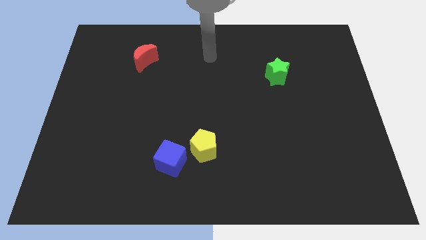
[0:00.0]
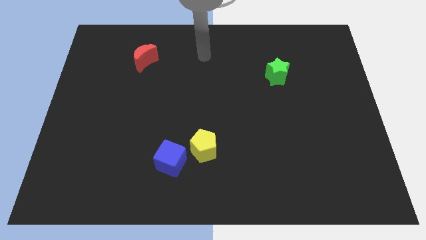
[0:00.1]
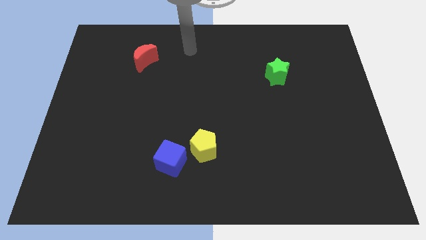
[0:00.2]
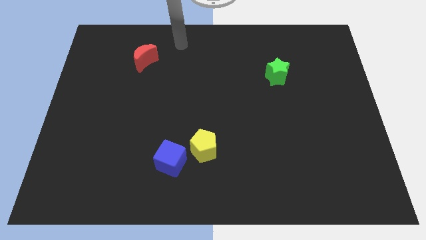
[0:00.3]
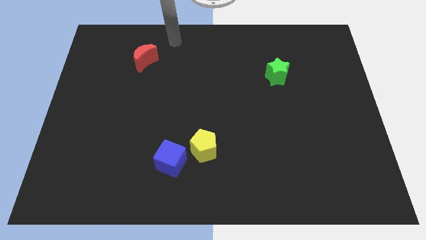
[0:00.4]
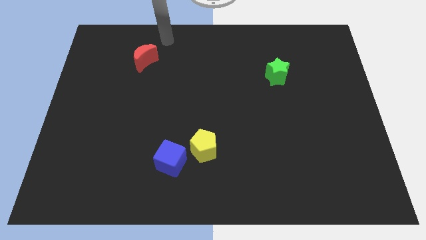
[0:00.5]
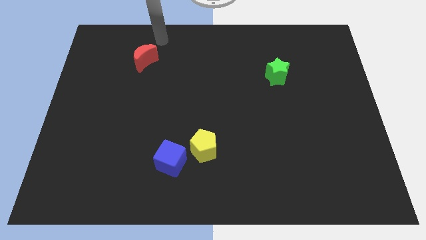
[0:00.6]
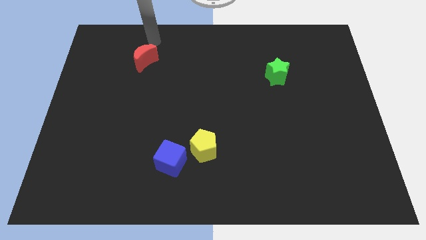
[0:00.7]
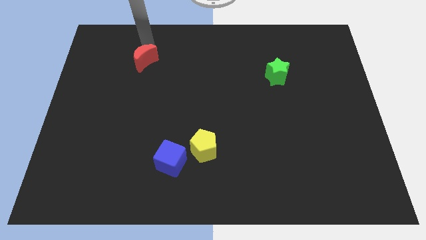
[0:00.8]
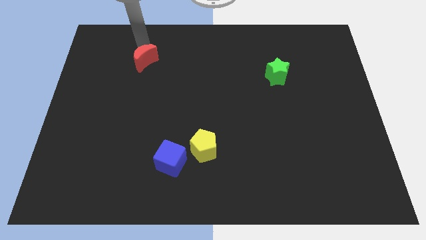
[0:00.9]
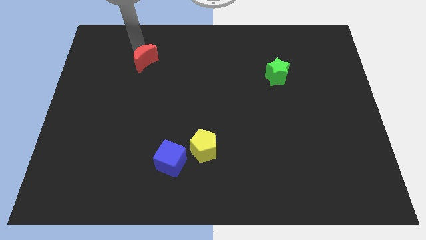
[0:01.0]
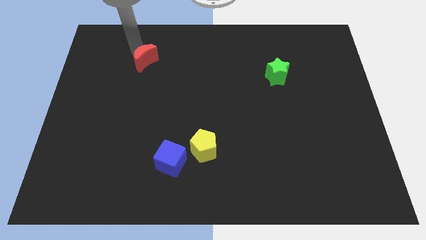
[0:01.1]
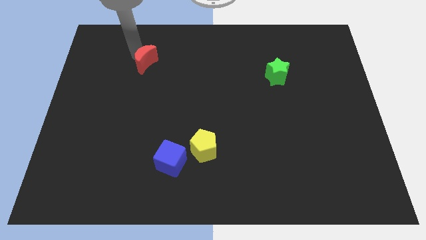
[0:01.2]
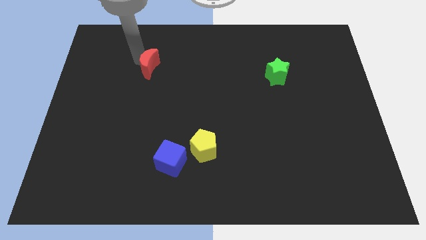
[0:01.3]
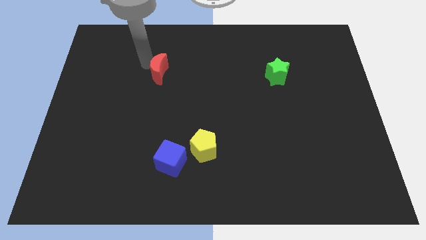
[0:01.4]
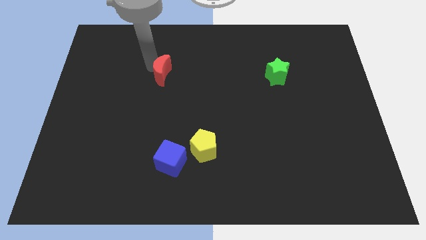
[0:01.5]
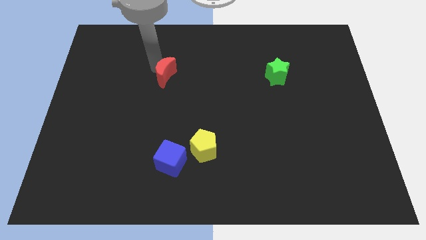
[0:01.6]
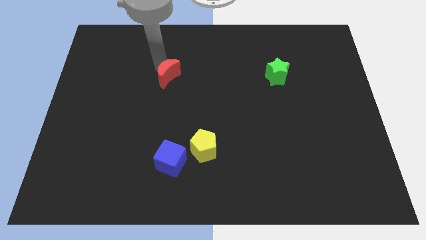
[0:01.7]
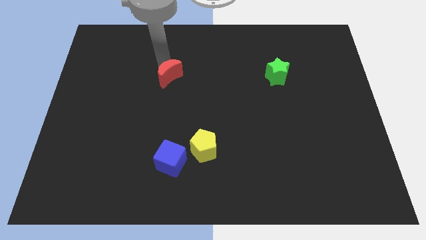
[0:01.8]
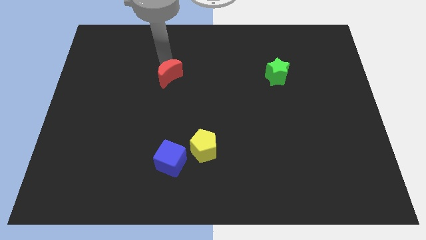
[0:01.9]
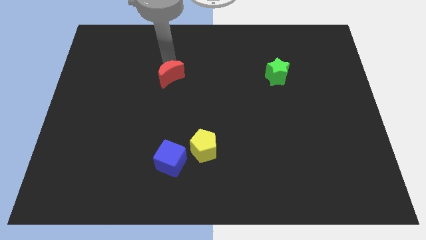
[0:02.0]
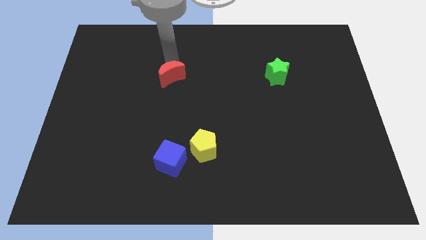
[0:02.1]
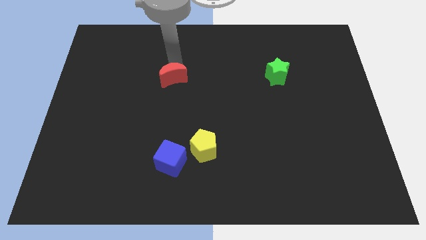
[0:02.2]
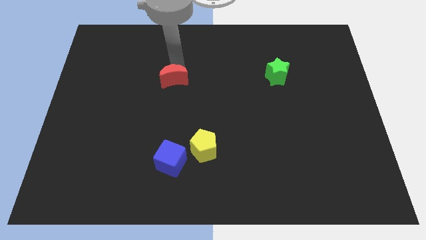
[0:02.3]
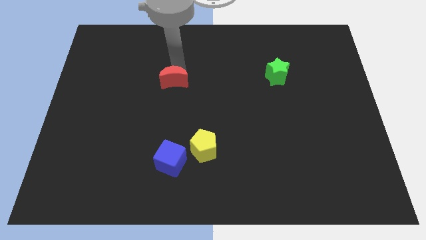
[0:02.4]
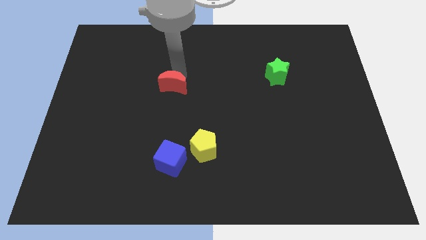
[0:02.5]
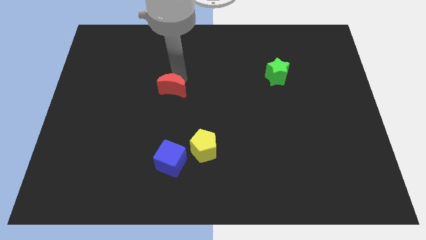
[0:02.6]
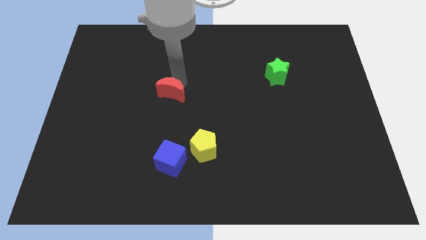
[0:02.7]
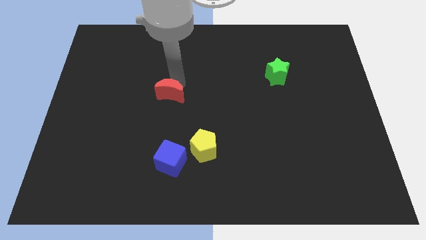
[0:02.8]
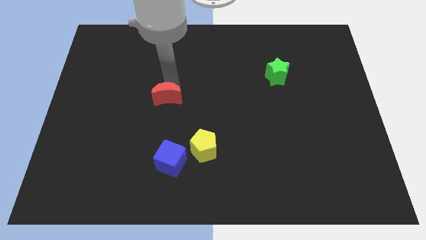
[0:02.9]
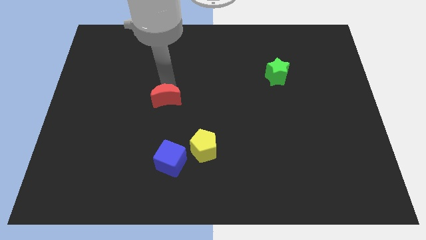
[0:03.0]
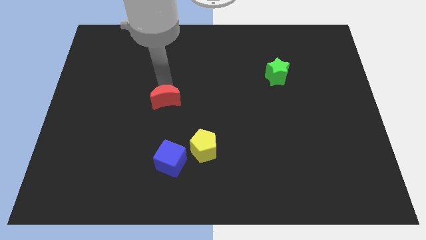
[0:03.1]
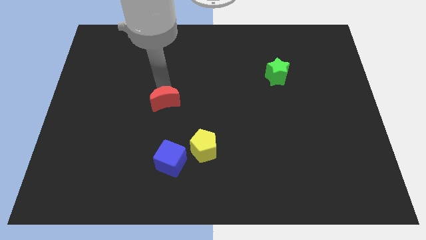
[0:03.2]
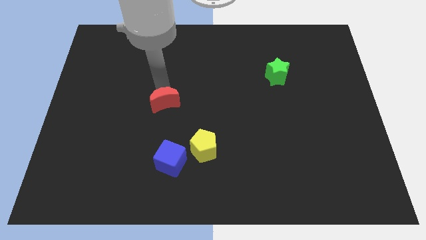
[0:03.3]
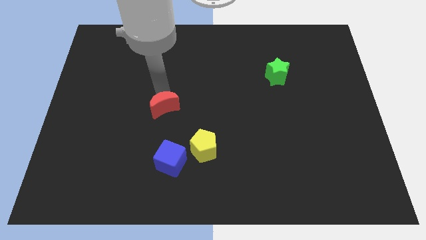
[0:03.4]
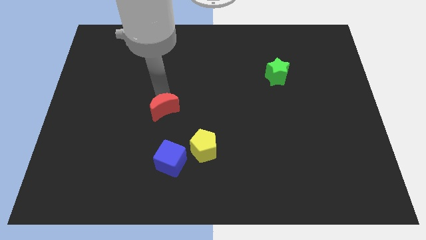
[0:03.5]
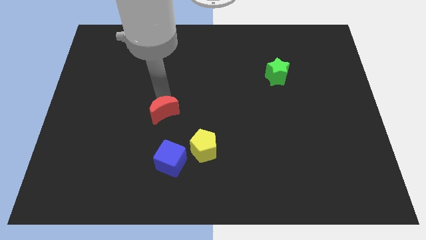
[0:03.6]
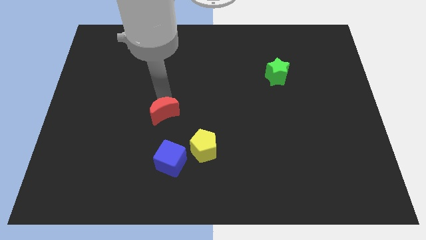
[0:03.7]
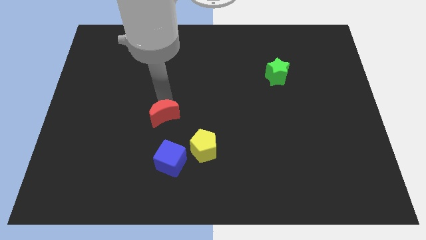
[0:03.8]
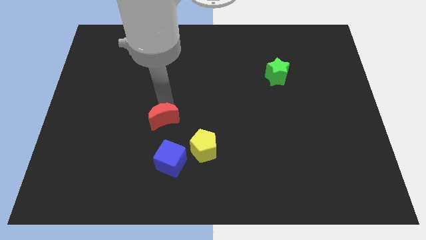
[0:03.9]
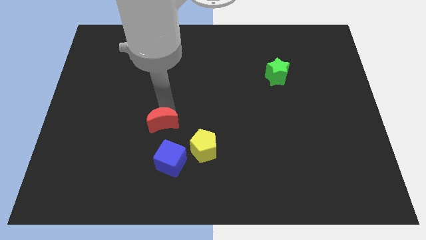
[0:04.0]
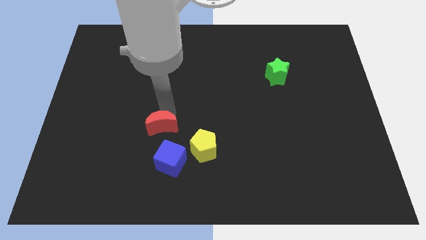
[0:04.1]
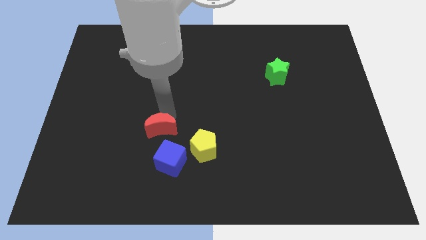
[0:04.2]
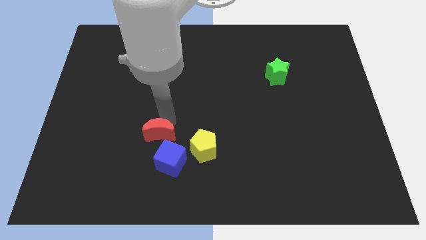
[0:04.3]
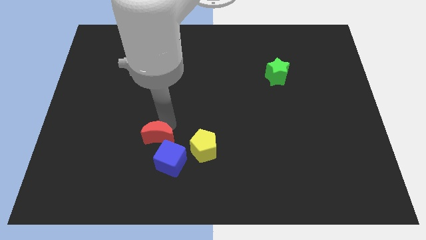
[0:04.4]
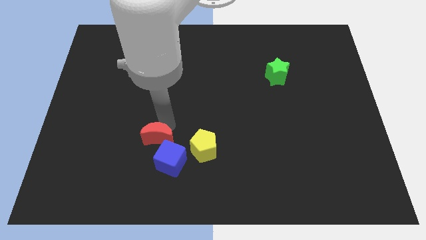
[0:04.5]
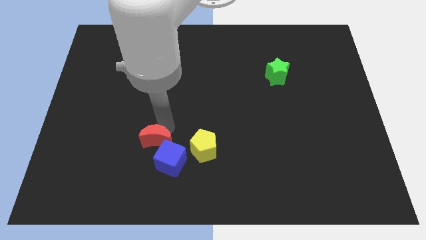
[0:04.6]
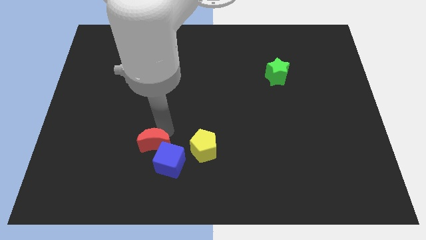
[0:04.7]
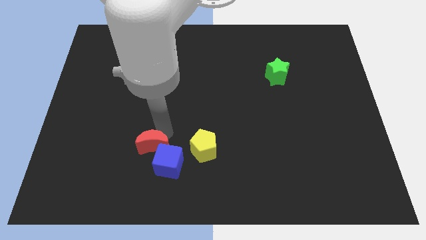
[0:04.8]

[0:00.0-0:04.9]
put the moon towards the blue block

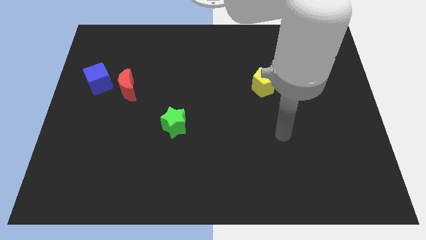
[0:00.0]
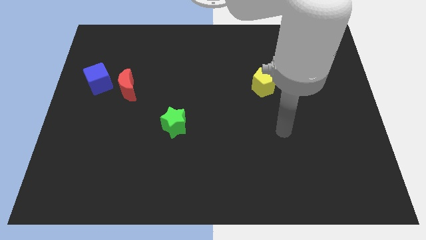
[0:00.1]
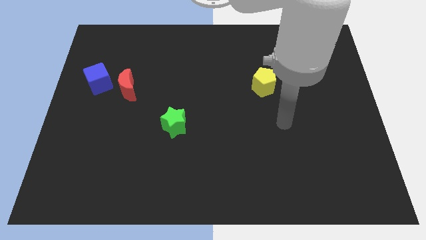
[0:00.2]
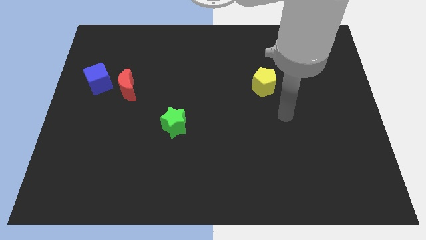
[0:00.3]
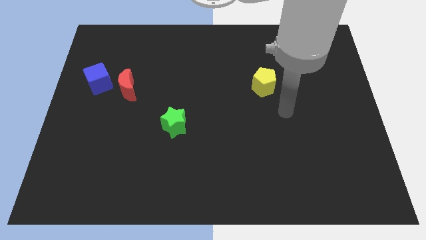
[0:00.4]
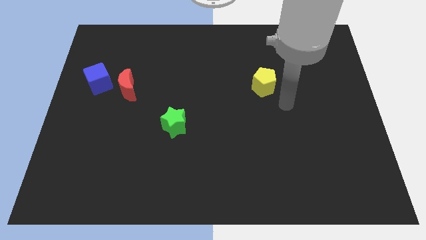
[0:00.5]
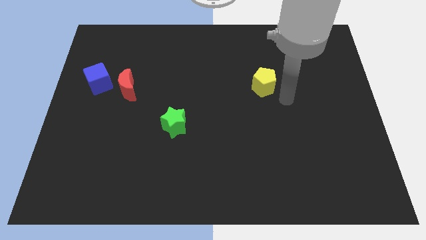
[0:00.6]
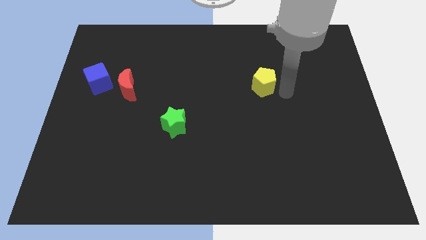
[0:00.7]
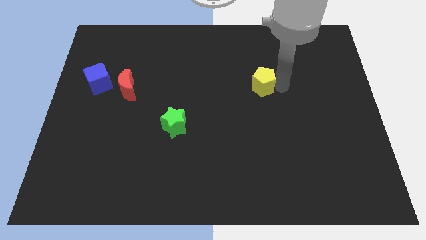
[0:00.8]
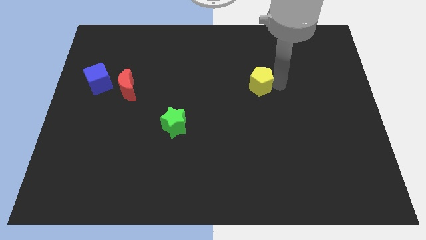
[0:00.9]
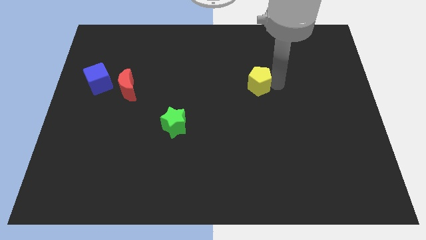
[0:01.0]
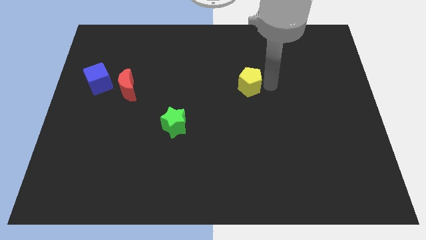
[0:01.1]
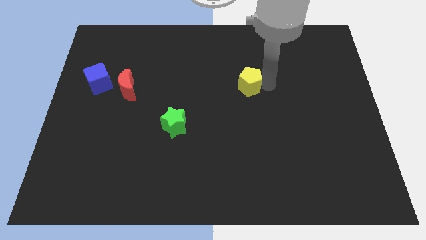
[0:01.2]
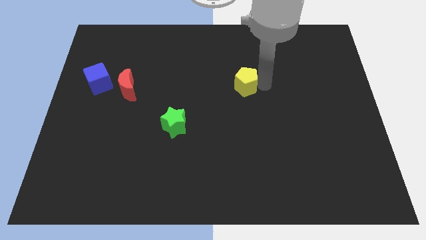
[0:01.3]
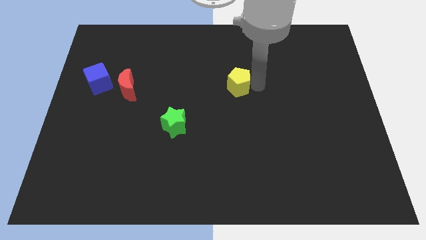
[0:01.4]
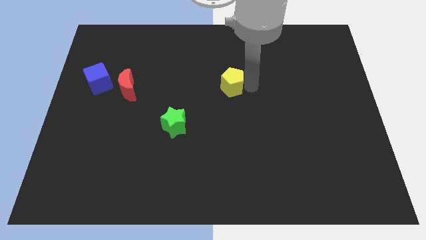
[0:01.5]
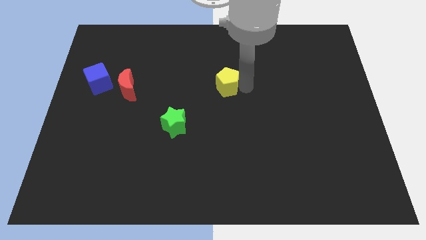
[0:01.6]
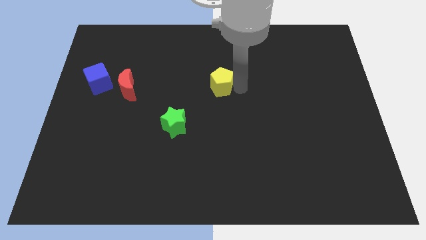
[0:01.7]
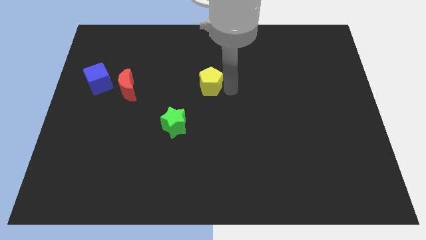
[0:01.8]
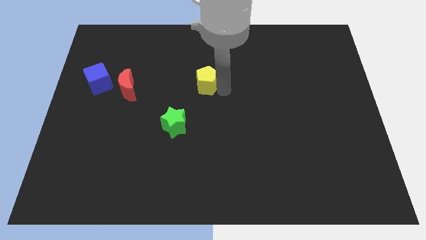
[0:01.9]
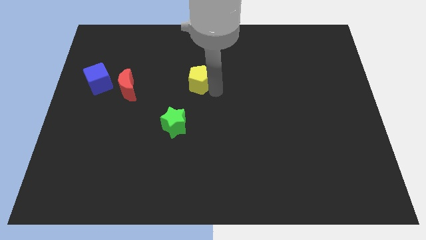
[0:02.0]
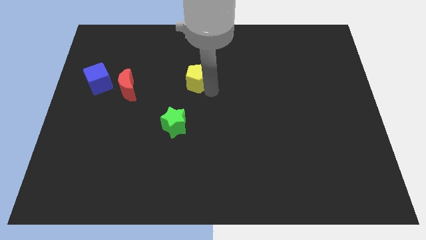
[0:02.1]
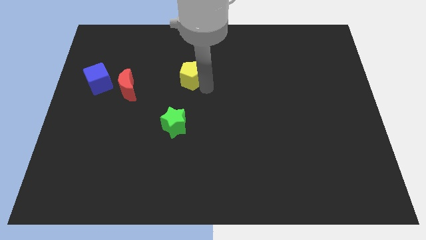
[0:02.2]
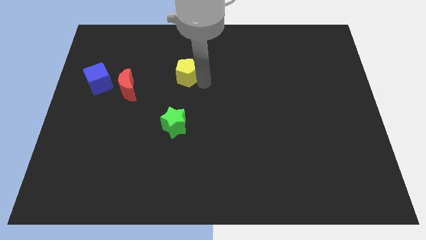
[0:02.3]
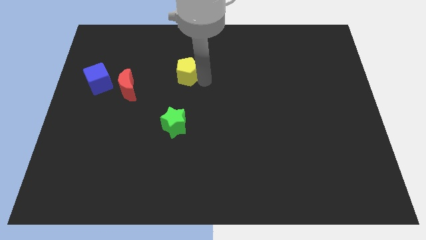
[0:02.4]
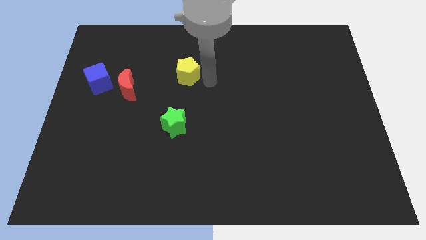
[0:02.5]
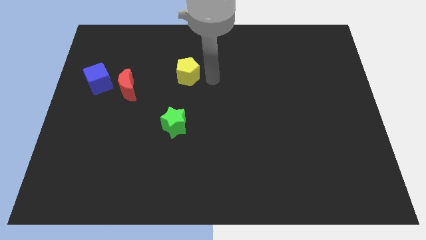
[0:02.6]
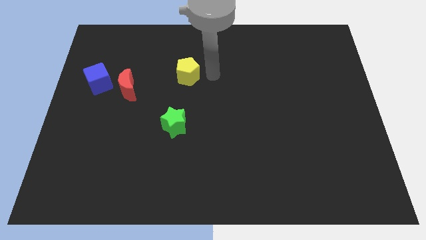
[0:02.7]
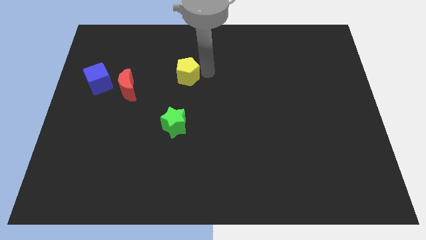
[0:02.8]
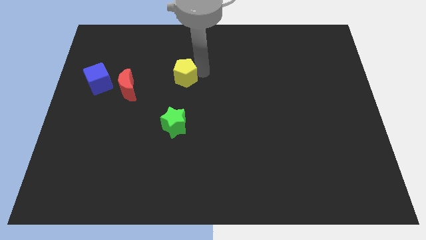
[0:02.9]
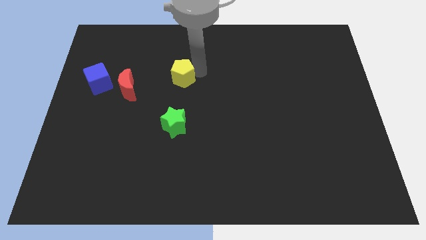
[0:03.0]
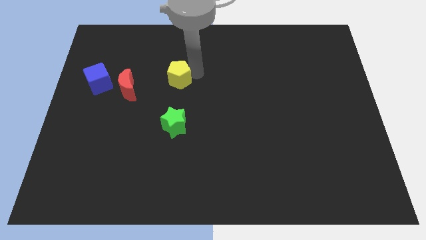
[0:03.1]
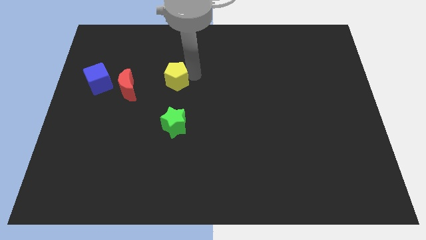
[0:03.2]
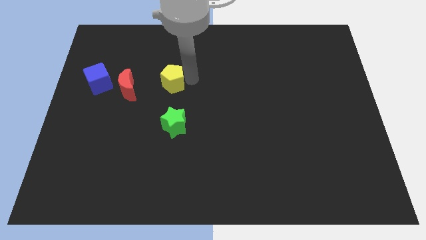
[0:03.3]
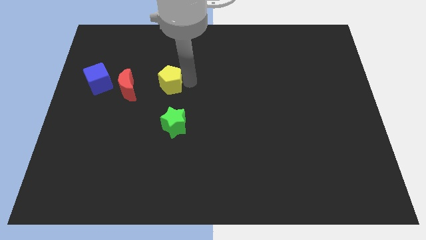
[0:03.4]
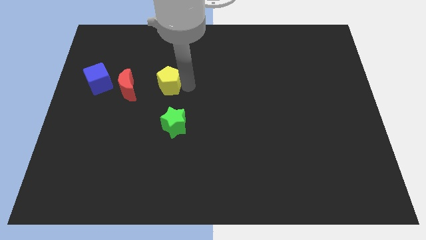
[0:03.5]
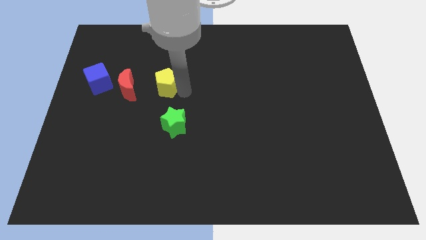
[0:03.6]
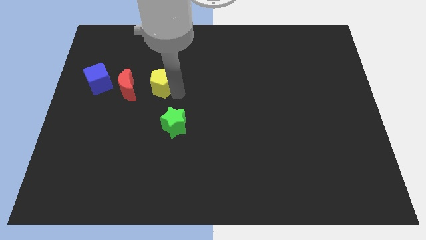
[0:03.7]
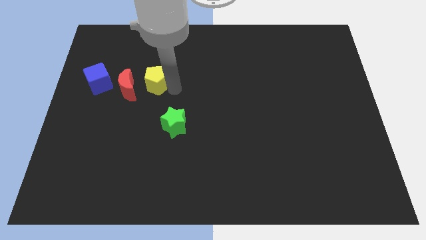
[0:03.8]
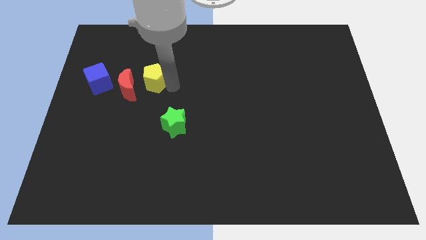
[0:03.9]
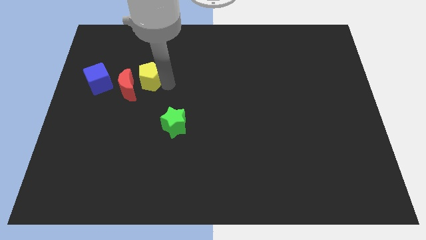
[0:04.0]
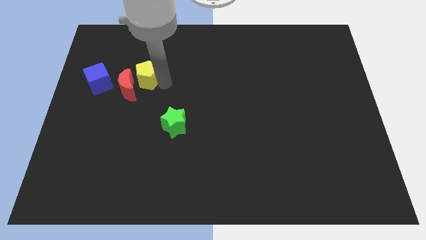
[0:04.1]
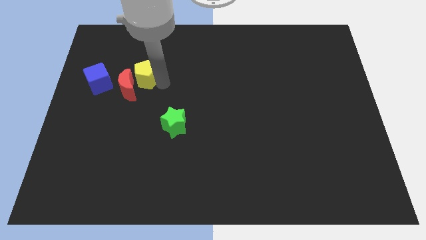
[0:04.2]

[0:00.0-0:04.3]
slide the yellow pentagon towards the red block
